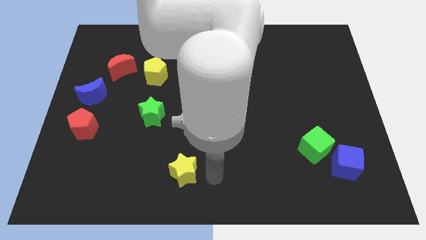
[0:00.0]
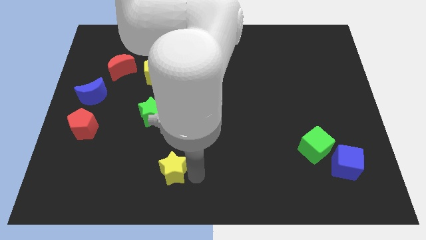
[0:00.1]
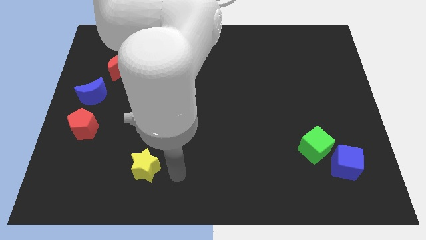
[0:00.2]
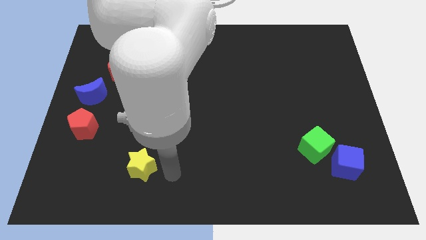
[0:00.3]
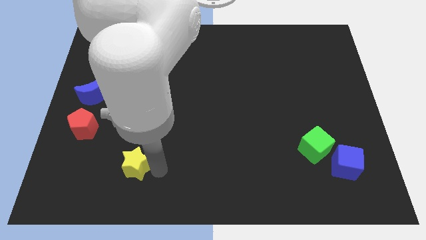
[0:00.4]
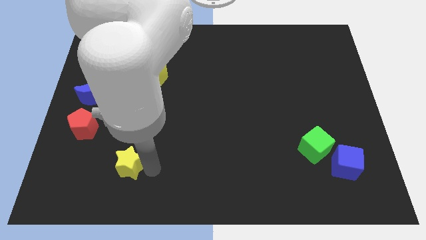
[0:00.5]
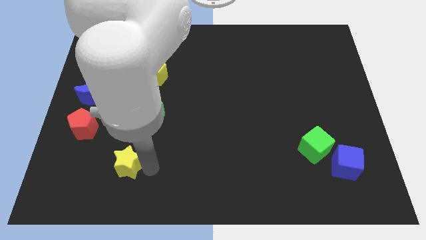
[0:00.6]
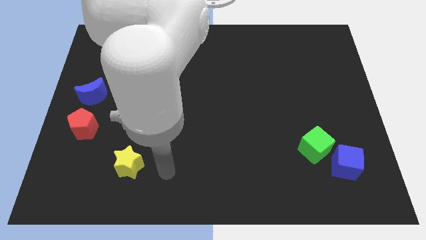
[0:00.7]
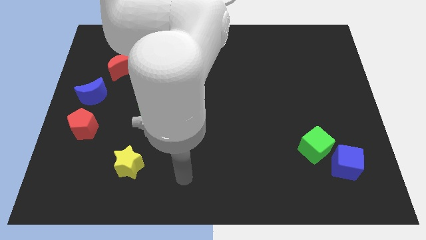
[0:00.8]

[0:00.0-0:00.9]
move the yellow star towards the left side of the board

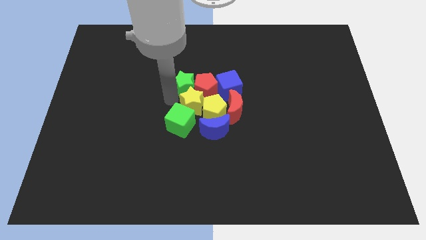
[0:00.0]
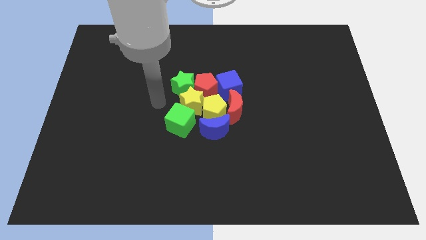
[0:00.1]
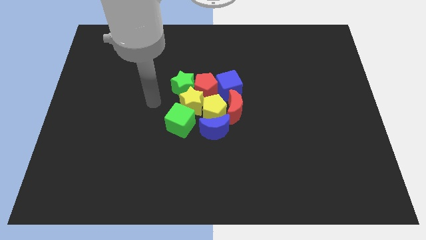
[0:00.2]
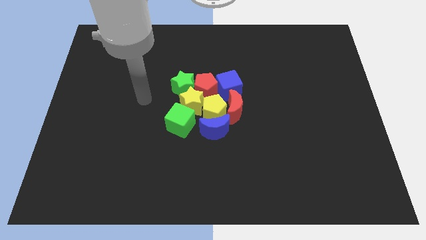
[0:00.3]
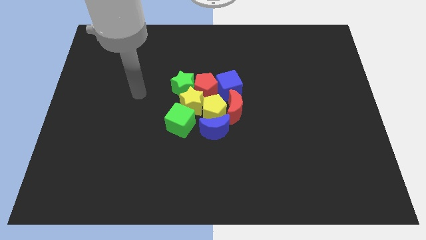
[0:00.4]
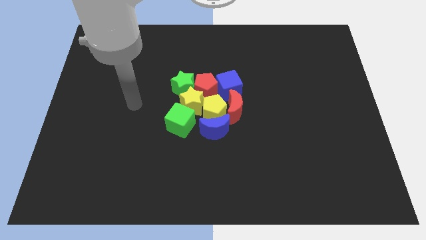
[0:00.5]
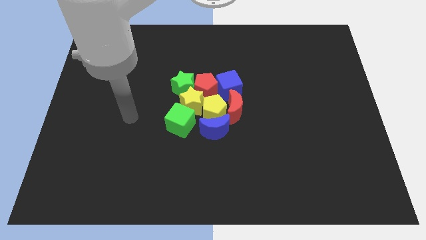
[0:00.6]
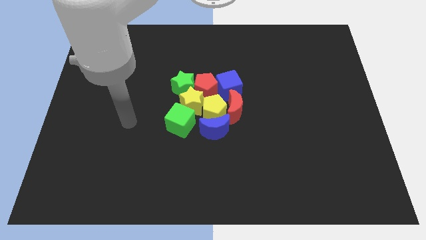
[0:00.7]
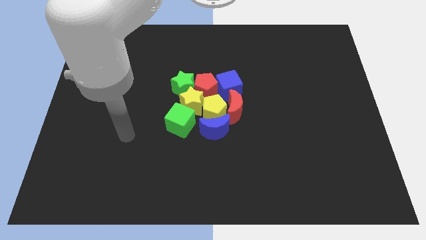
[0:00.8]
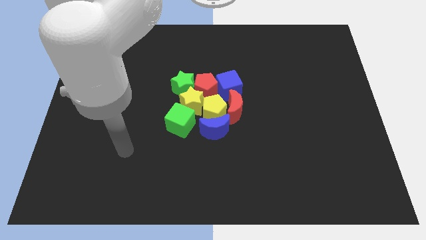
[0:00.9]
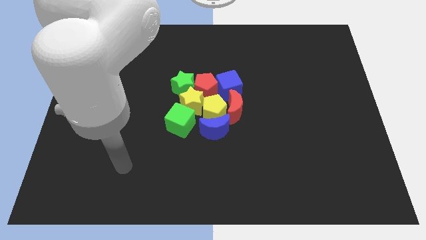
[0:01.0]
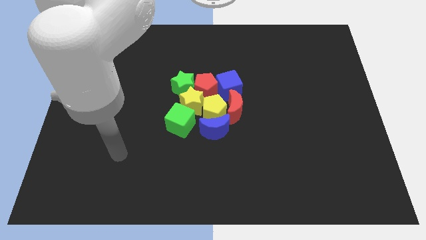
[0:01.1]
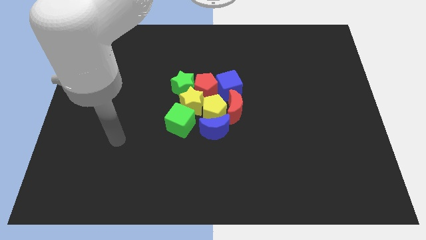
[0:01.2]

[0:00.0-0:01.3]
move your arm slightly to the down

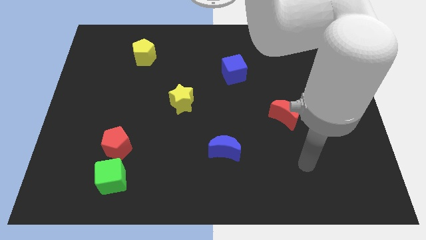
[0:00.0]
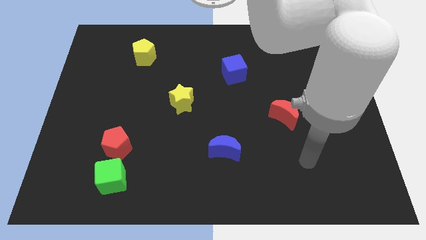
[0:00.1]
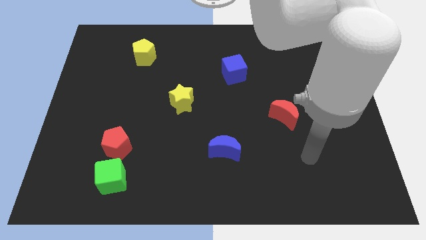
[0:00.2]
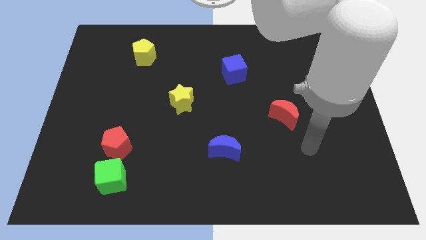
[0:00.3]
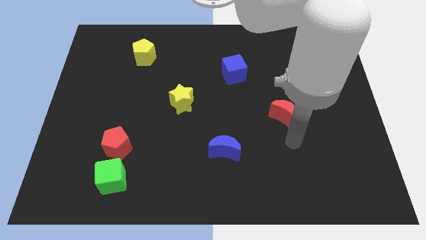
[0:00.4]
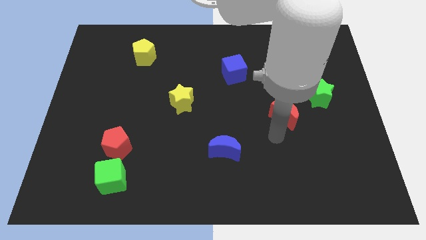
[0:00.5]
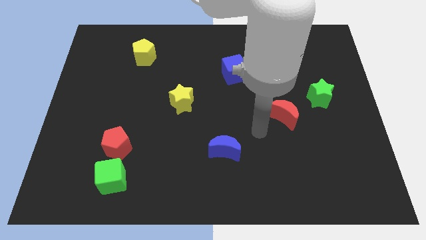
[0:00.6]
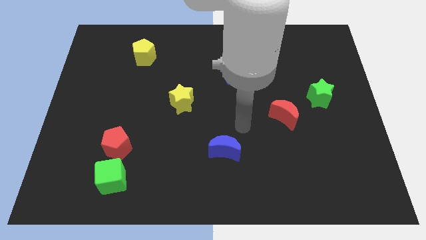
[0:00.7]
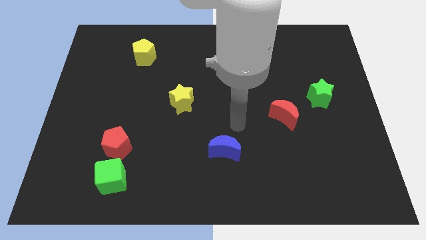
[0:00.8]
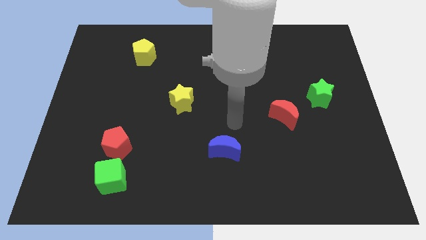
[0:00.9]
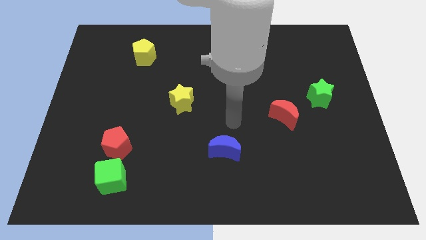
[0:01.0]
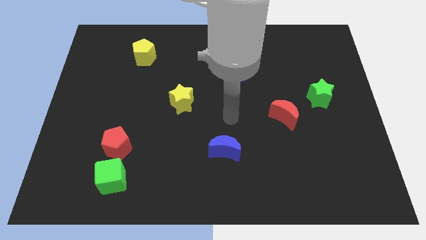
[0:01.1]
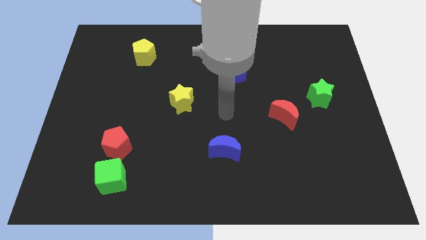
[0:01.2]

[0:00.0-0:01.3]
place the pointer on top of the blue moon

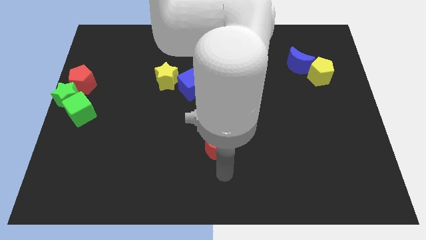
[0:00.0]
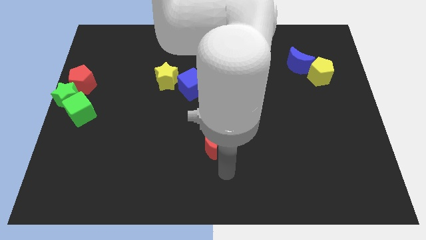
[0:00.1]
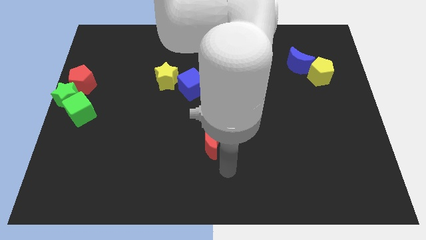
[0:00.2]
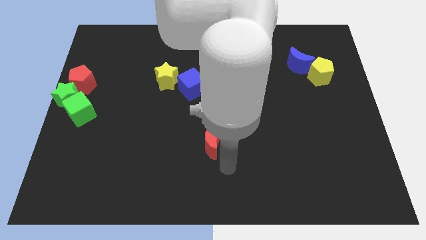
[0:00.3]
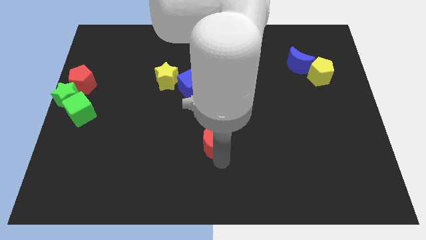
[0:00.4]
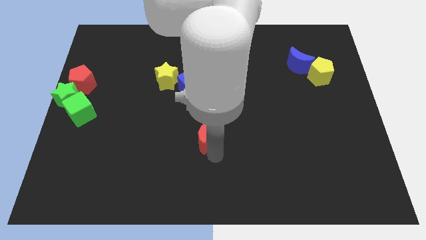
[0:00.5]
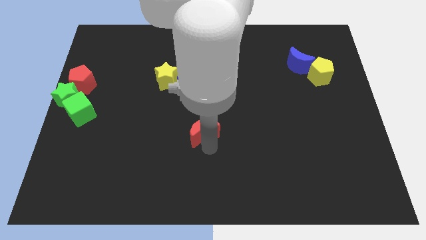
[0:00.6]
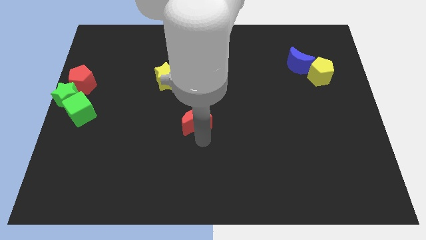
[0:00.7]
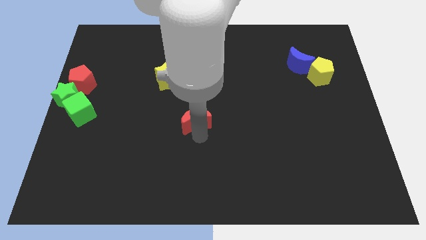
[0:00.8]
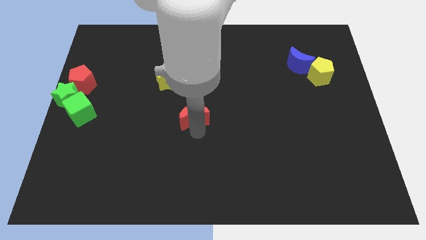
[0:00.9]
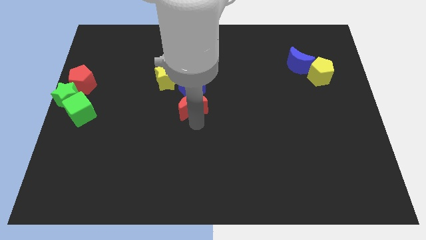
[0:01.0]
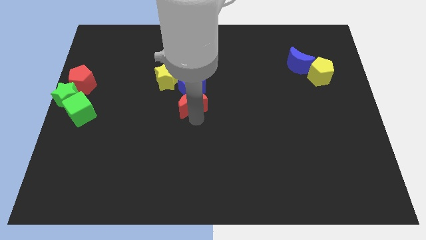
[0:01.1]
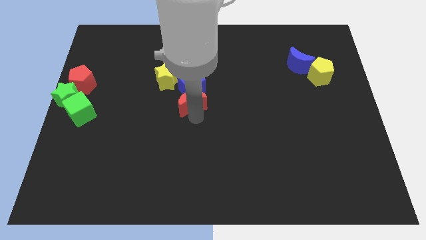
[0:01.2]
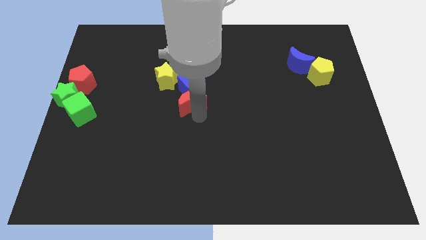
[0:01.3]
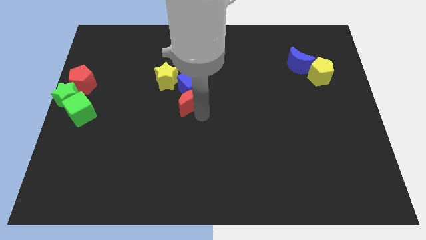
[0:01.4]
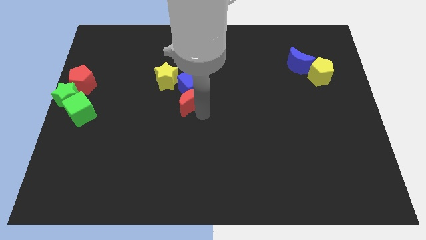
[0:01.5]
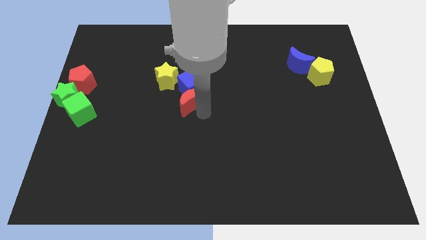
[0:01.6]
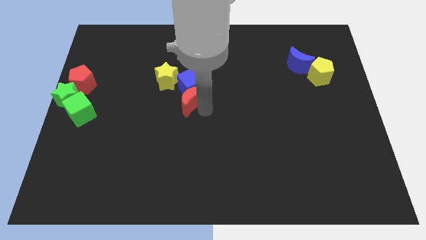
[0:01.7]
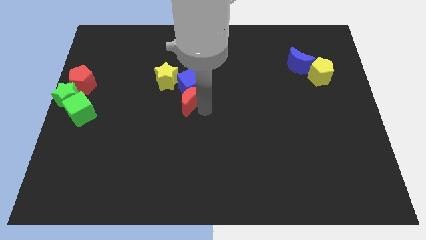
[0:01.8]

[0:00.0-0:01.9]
place the red moon below the blue cube

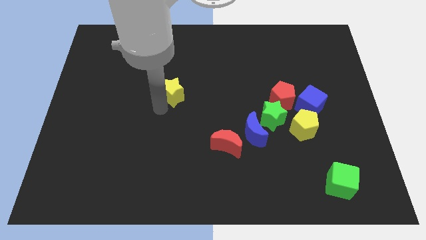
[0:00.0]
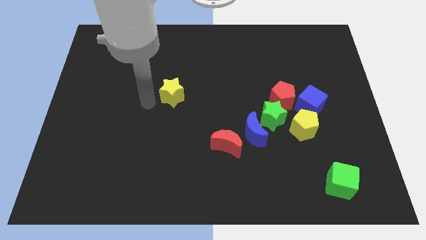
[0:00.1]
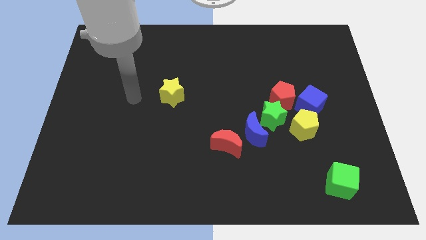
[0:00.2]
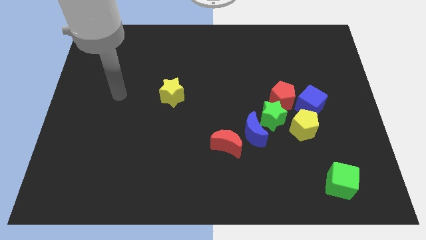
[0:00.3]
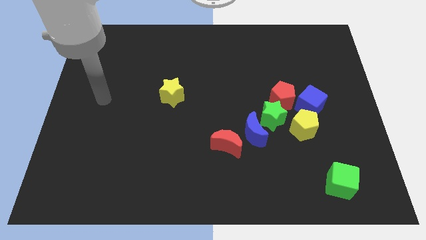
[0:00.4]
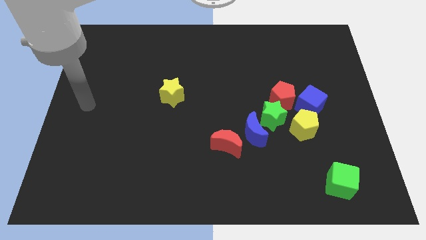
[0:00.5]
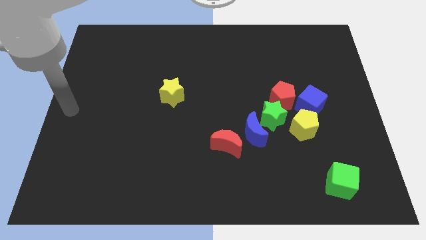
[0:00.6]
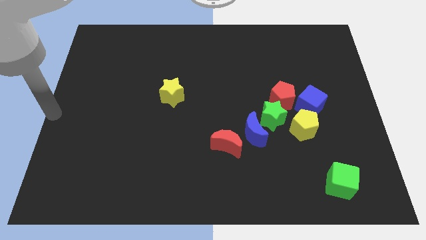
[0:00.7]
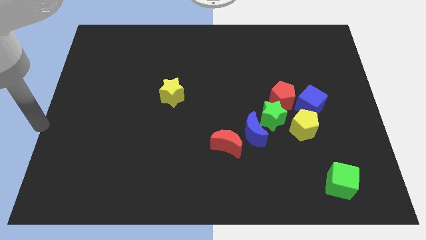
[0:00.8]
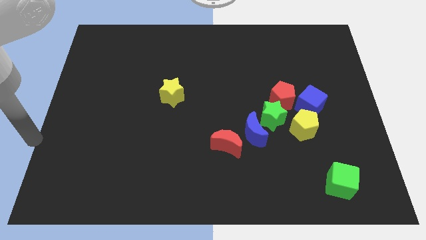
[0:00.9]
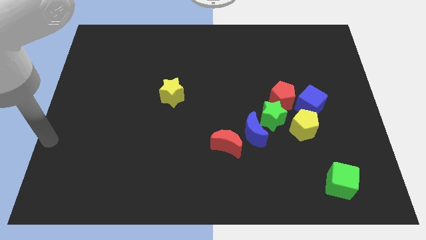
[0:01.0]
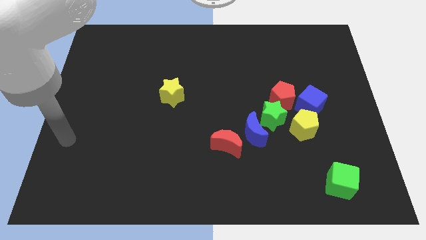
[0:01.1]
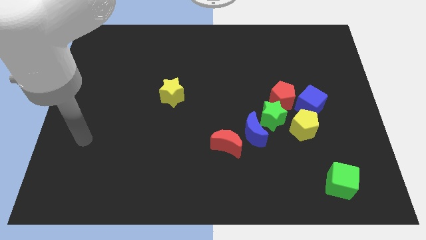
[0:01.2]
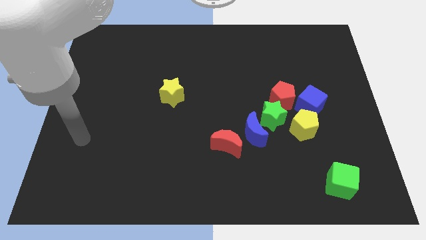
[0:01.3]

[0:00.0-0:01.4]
move your arm away from the yellow star

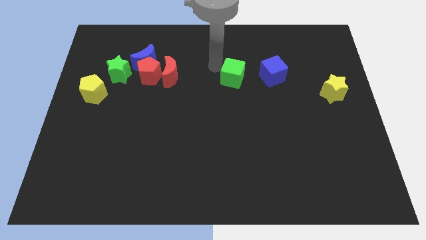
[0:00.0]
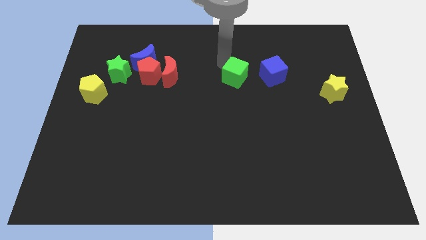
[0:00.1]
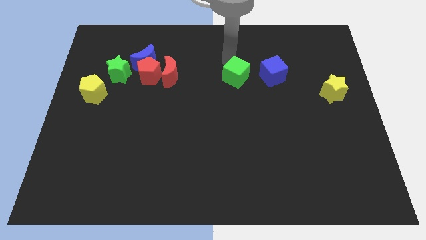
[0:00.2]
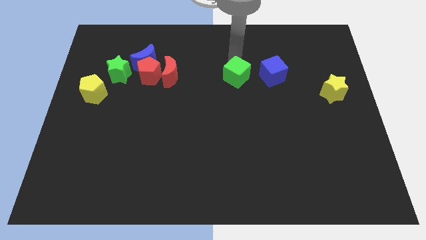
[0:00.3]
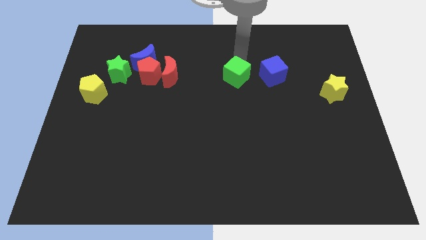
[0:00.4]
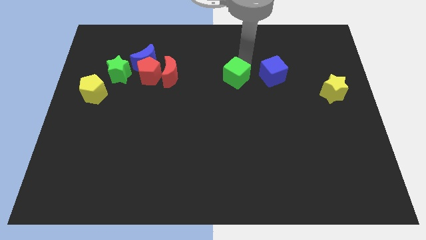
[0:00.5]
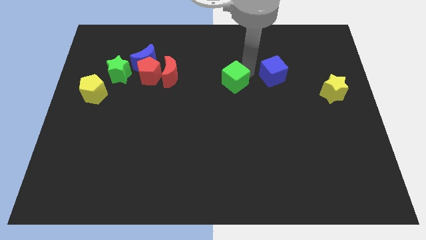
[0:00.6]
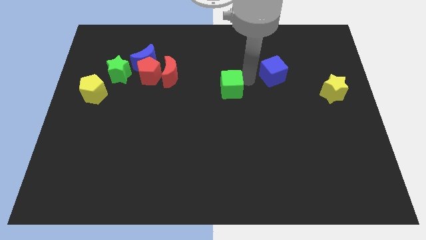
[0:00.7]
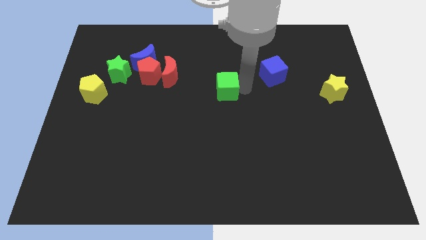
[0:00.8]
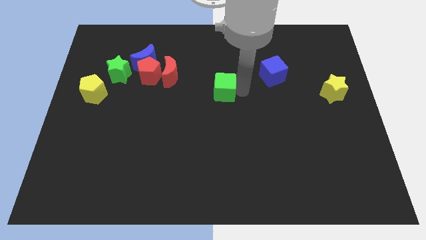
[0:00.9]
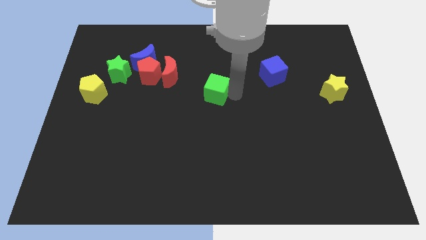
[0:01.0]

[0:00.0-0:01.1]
slide green cube towards center

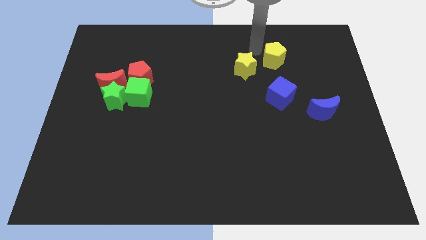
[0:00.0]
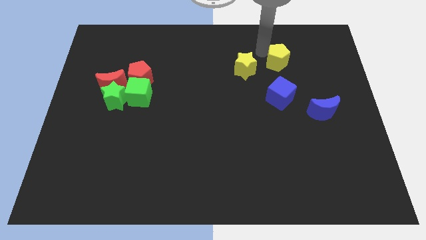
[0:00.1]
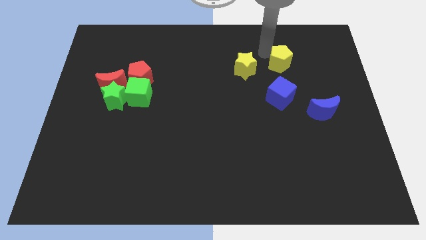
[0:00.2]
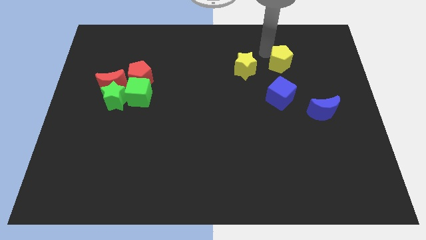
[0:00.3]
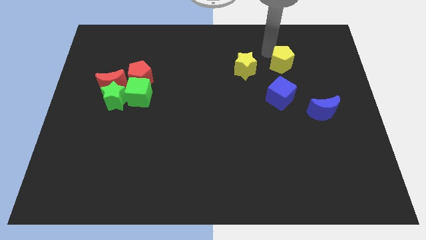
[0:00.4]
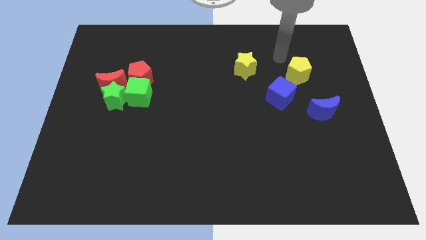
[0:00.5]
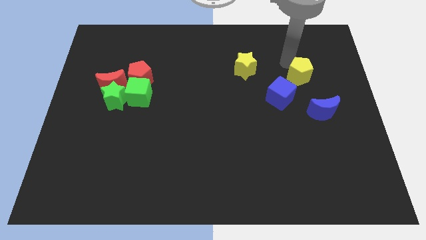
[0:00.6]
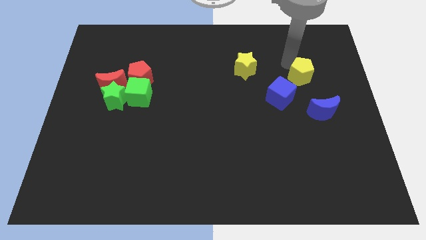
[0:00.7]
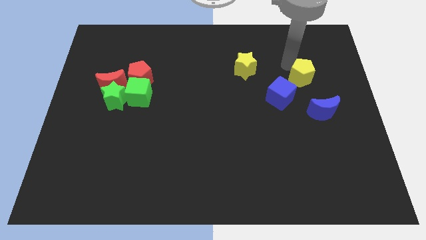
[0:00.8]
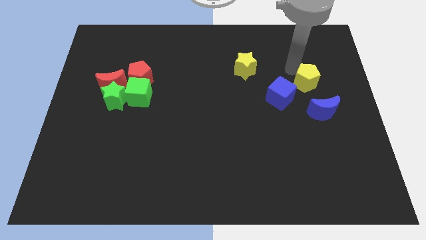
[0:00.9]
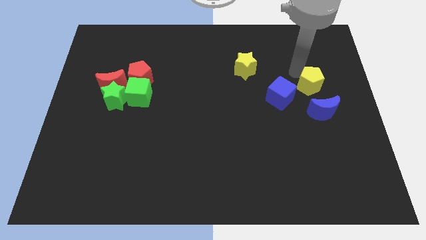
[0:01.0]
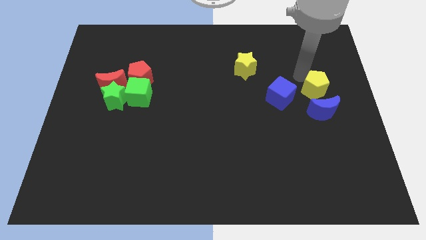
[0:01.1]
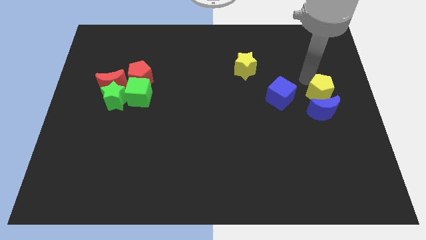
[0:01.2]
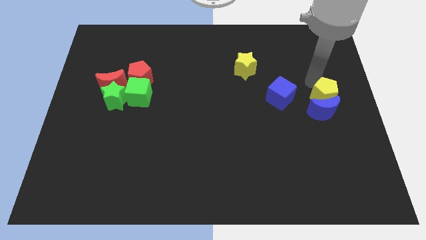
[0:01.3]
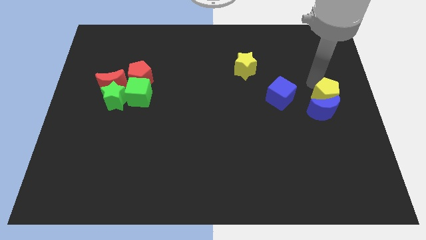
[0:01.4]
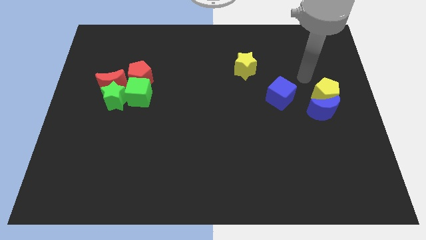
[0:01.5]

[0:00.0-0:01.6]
place the yellow pentagon into the top of blue moon
